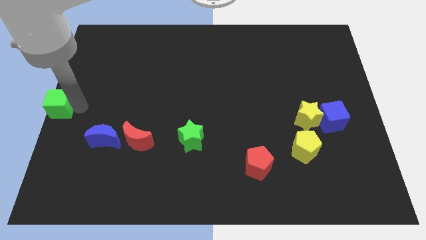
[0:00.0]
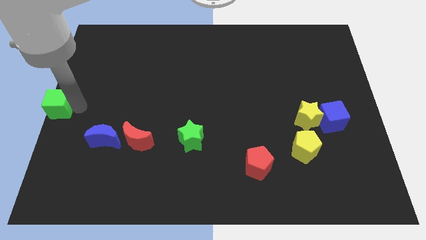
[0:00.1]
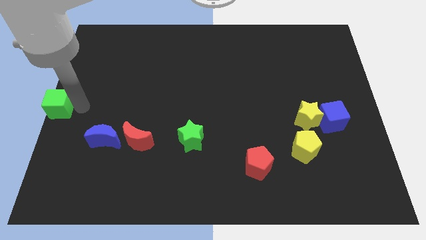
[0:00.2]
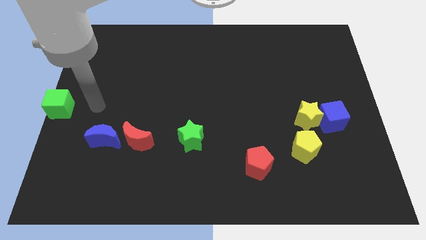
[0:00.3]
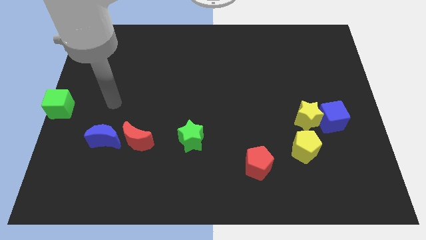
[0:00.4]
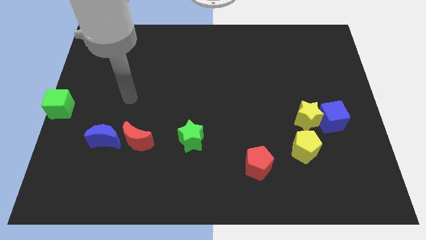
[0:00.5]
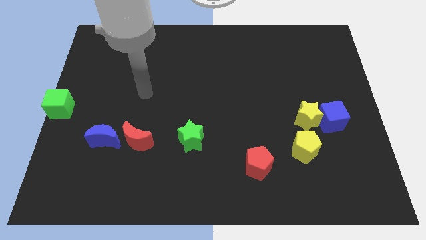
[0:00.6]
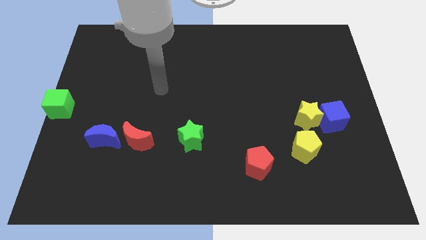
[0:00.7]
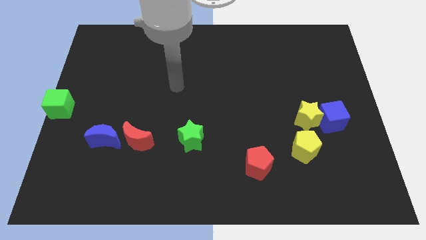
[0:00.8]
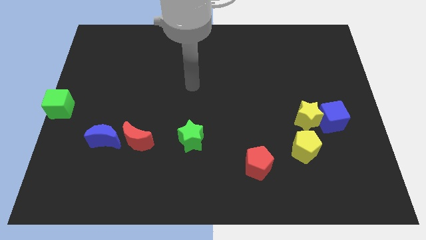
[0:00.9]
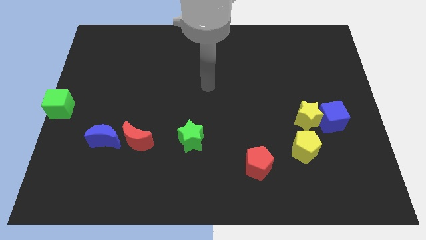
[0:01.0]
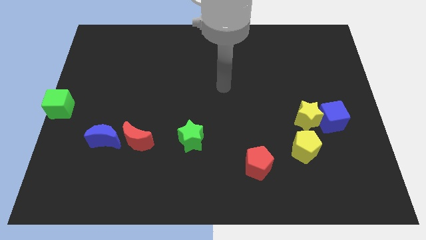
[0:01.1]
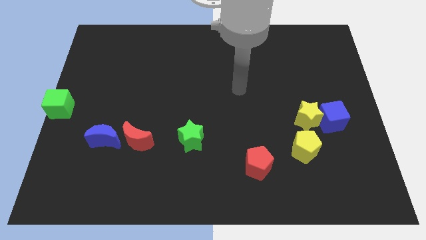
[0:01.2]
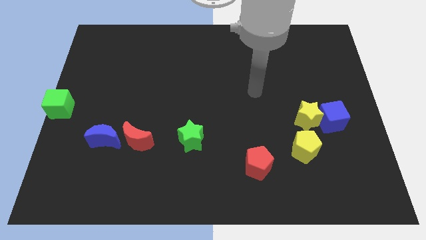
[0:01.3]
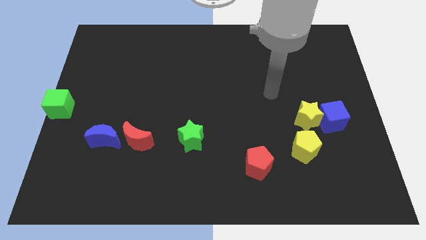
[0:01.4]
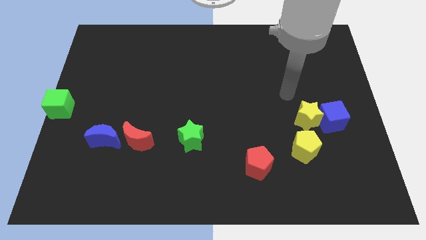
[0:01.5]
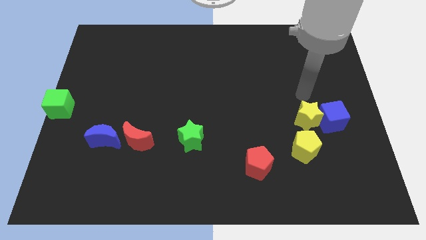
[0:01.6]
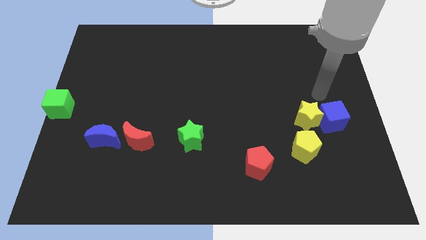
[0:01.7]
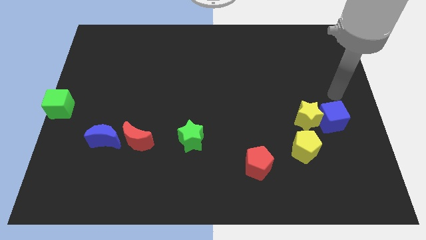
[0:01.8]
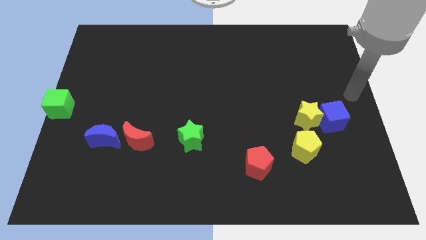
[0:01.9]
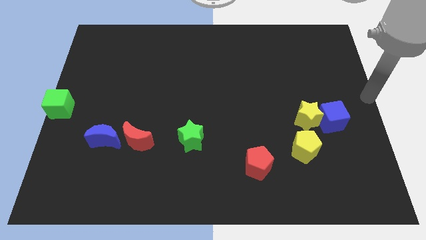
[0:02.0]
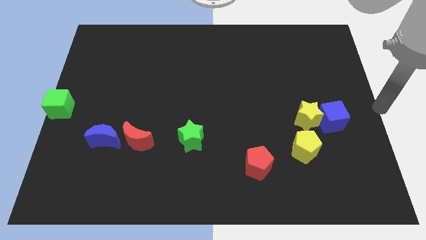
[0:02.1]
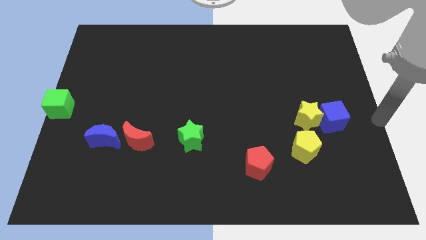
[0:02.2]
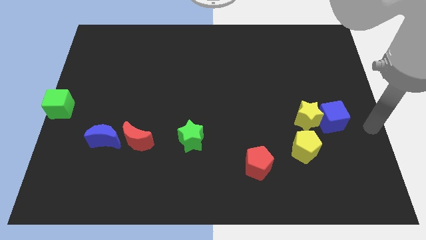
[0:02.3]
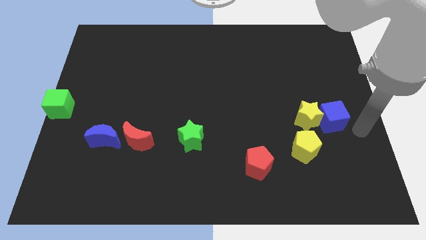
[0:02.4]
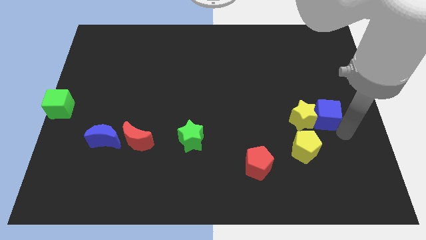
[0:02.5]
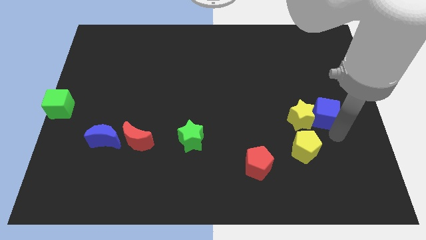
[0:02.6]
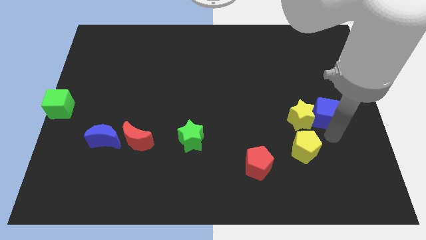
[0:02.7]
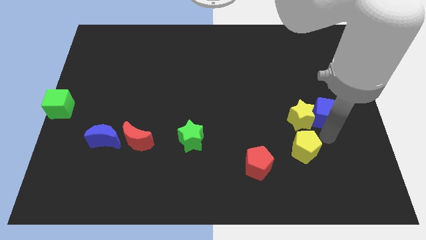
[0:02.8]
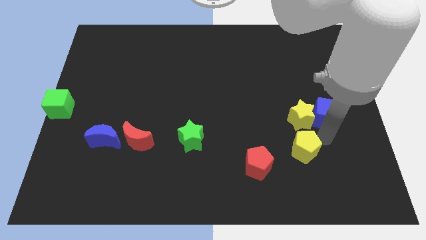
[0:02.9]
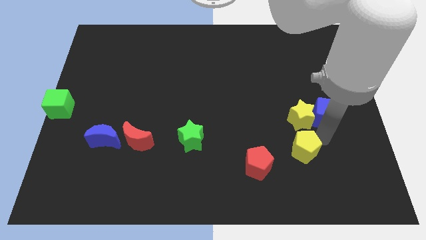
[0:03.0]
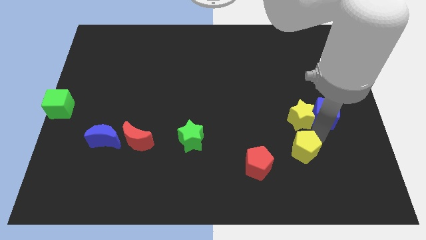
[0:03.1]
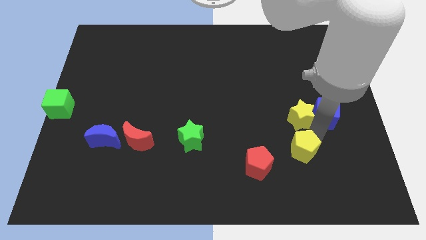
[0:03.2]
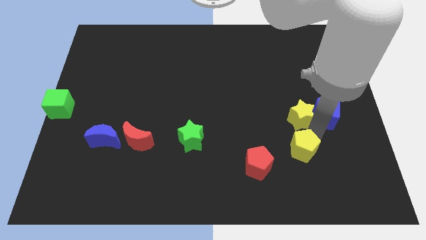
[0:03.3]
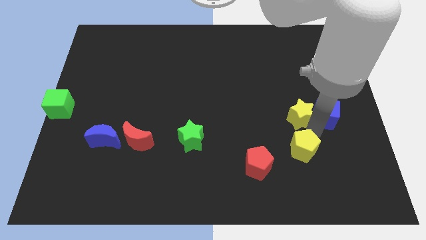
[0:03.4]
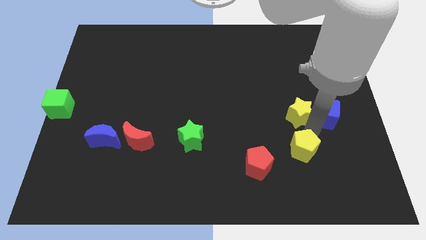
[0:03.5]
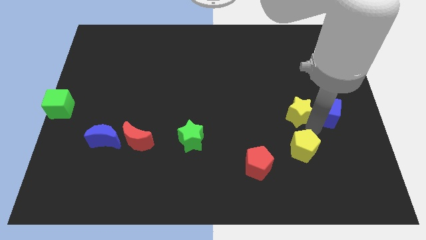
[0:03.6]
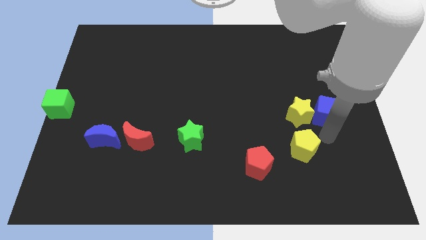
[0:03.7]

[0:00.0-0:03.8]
point your arm below the blue cube

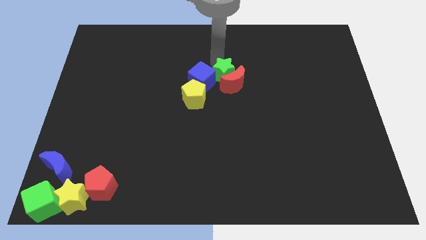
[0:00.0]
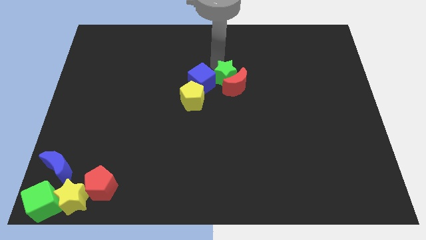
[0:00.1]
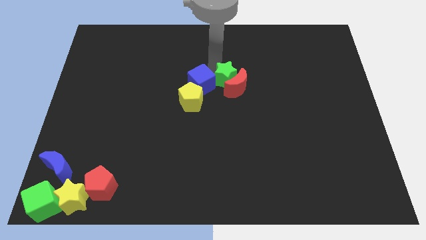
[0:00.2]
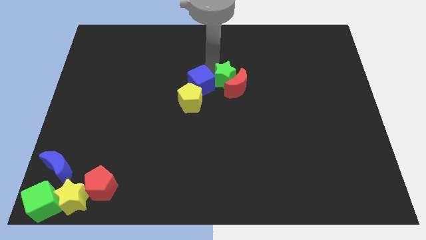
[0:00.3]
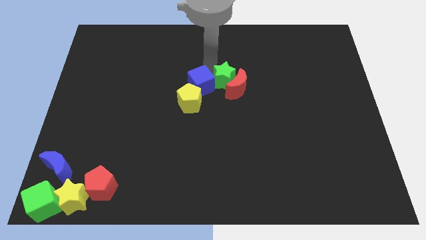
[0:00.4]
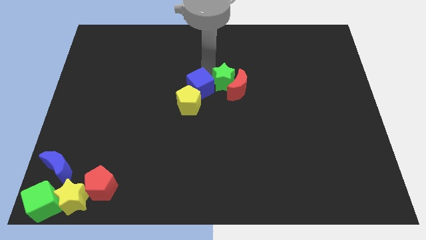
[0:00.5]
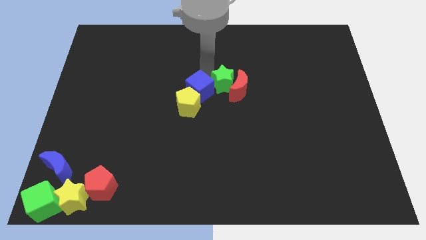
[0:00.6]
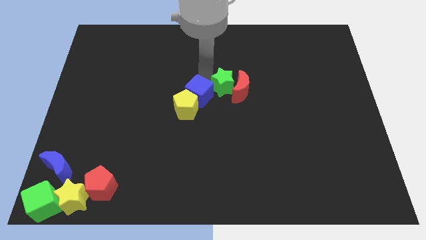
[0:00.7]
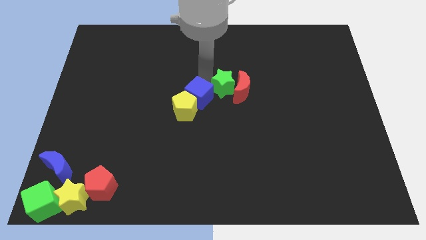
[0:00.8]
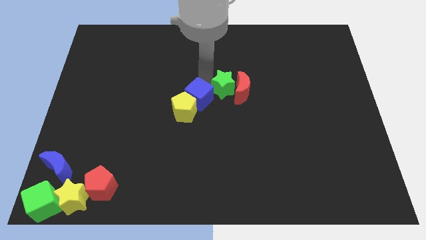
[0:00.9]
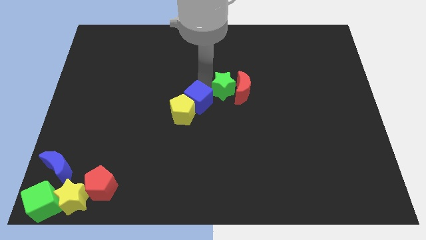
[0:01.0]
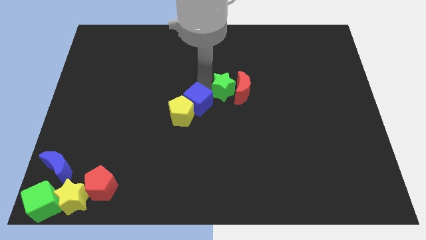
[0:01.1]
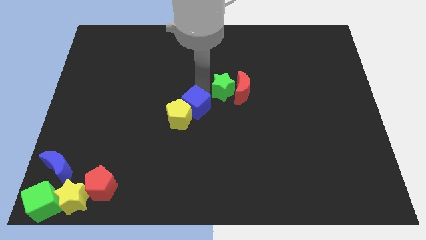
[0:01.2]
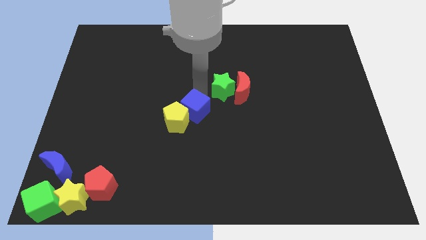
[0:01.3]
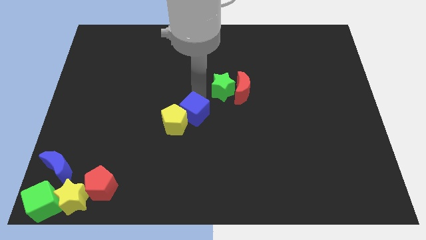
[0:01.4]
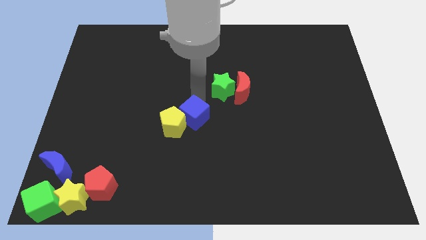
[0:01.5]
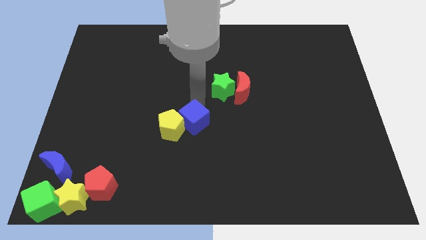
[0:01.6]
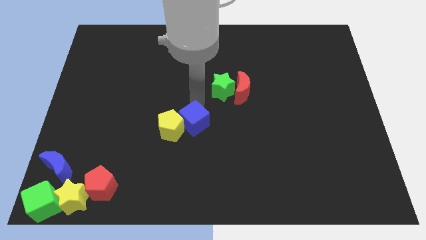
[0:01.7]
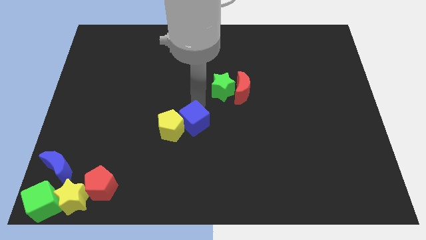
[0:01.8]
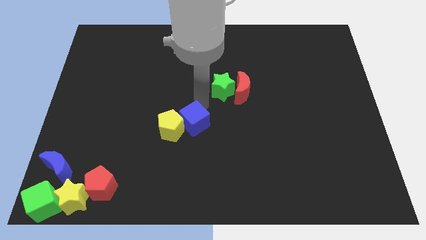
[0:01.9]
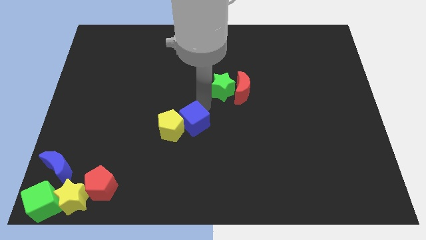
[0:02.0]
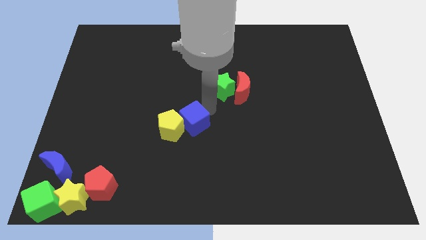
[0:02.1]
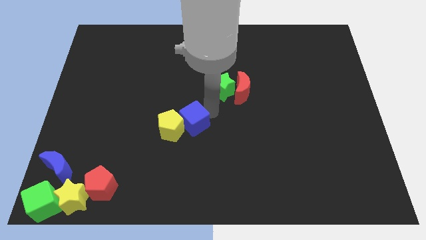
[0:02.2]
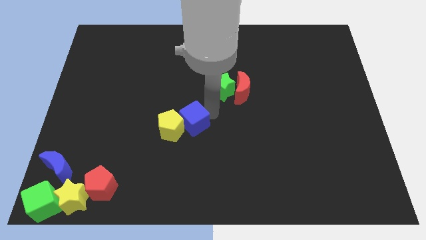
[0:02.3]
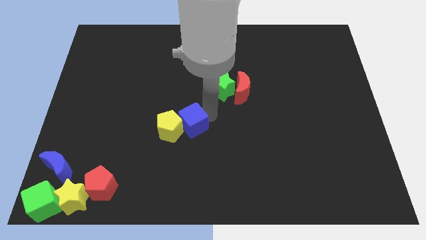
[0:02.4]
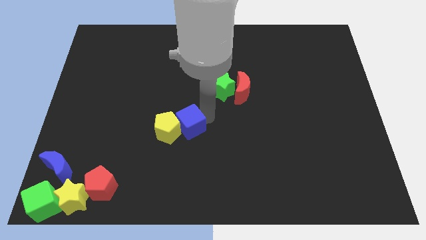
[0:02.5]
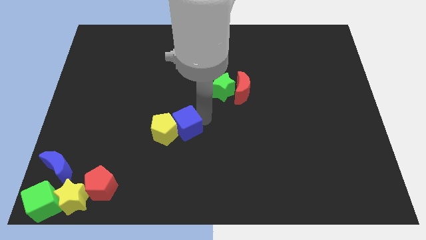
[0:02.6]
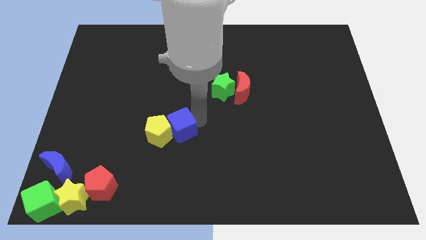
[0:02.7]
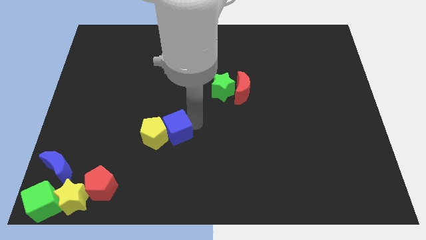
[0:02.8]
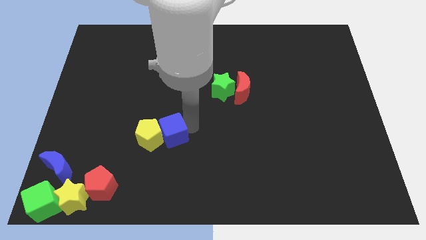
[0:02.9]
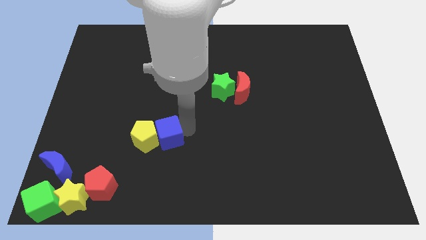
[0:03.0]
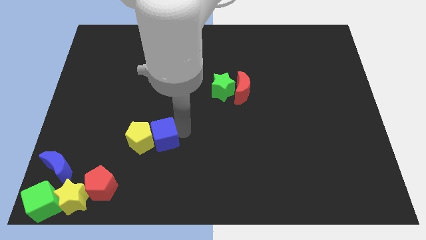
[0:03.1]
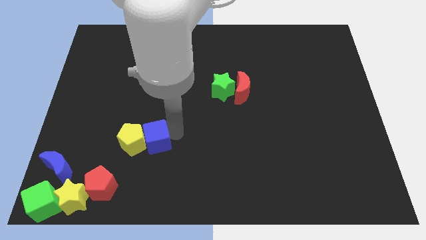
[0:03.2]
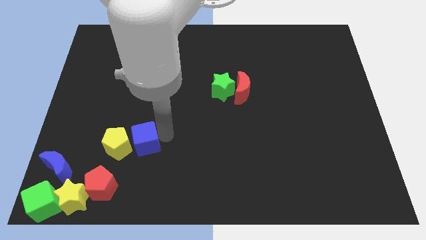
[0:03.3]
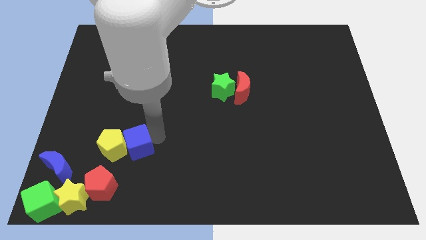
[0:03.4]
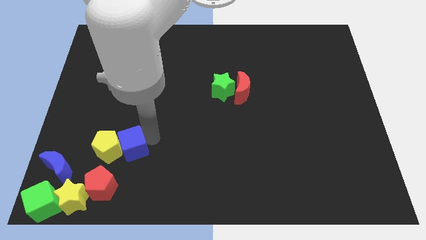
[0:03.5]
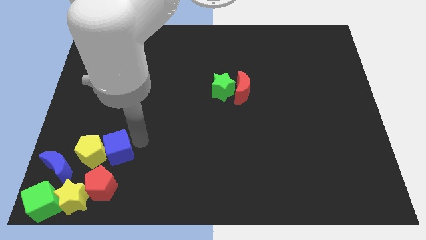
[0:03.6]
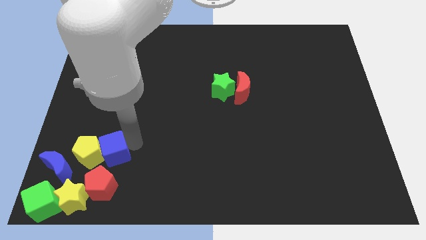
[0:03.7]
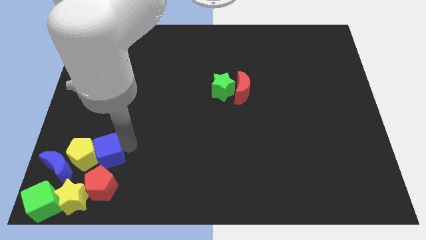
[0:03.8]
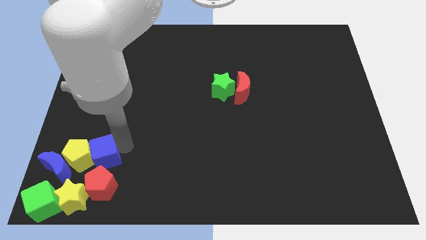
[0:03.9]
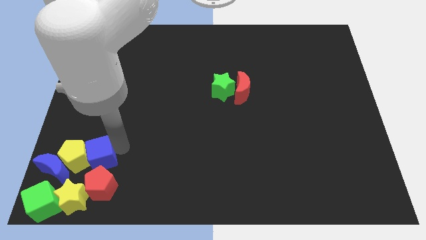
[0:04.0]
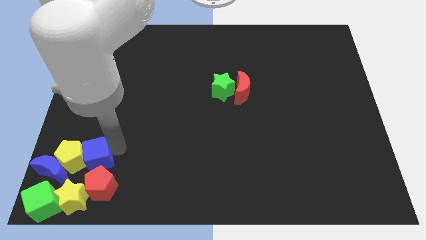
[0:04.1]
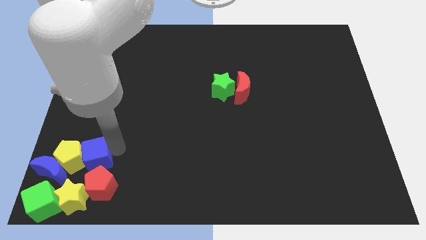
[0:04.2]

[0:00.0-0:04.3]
slide the yellow pentagon and blue cube to the bottom left of the board

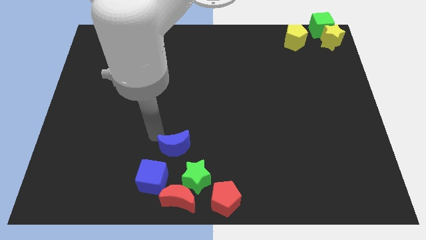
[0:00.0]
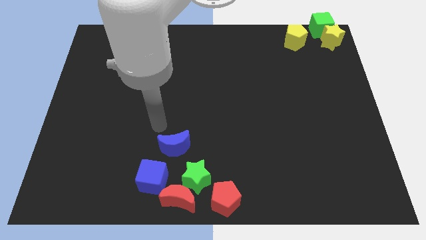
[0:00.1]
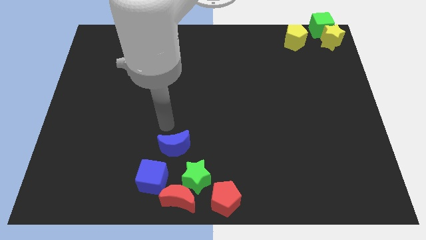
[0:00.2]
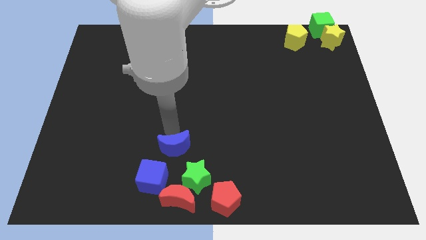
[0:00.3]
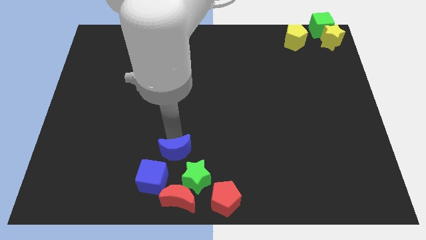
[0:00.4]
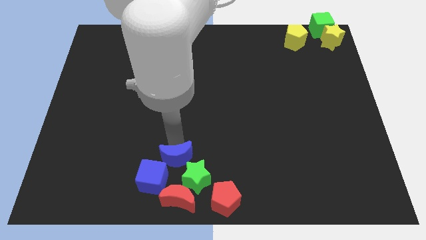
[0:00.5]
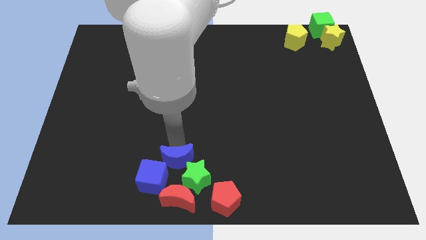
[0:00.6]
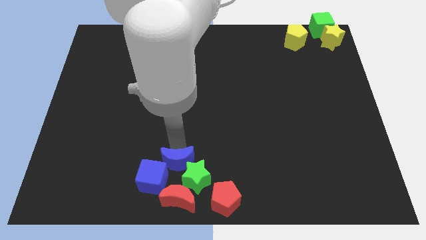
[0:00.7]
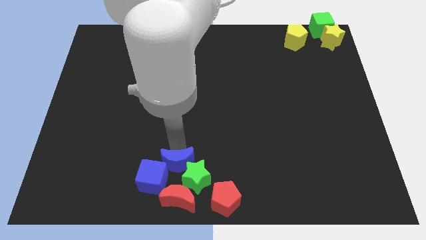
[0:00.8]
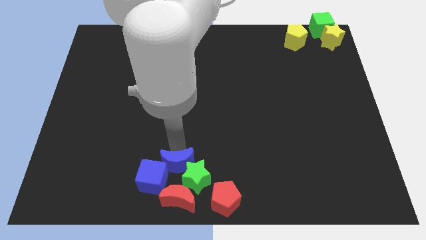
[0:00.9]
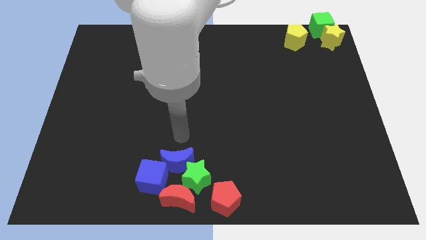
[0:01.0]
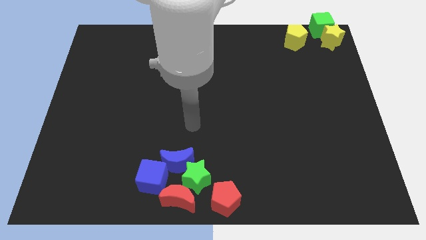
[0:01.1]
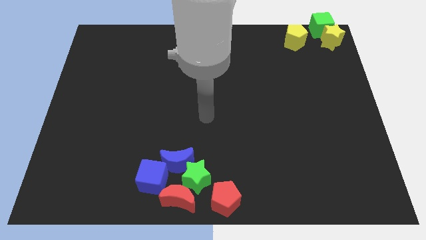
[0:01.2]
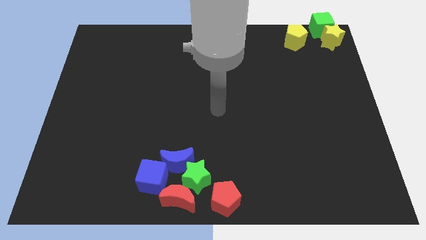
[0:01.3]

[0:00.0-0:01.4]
move the arm away from the blue crescent
